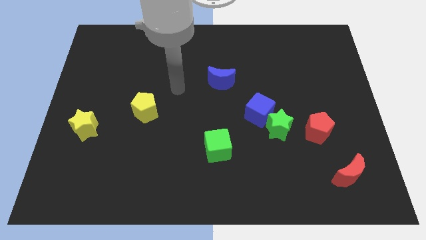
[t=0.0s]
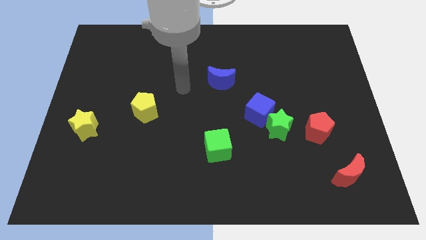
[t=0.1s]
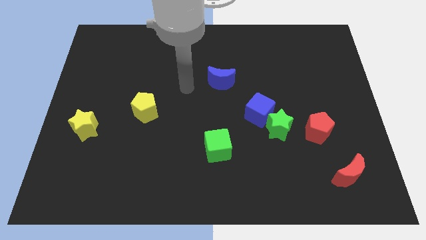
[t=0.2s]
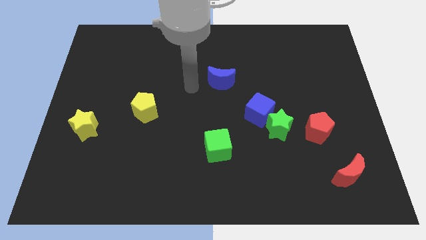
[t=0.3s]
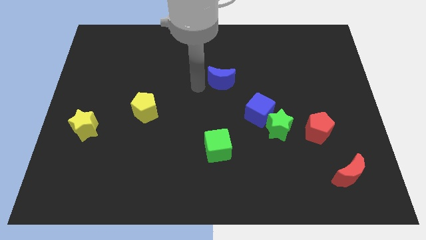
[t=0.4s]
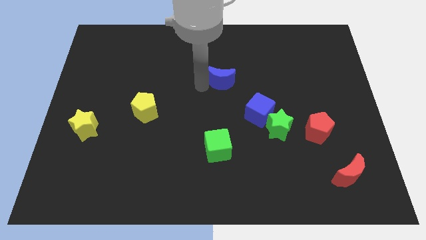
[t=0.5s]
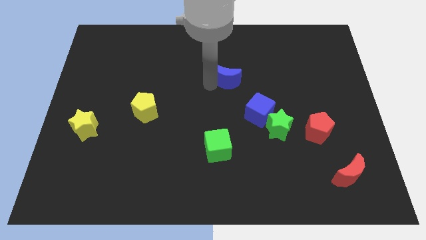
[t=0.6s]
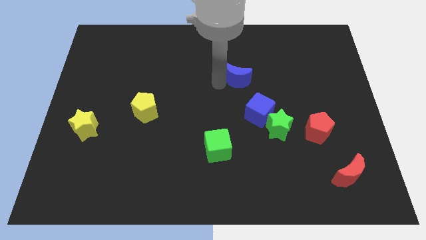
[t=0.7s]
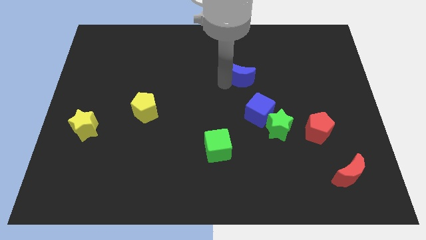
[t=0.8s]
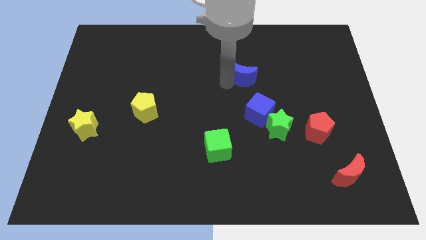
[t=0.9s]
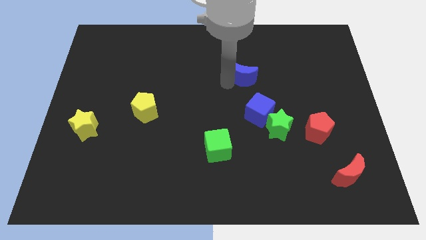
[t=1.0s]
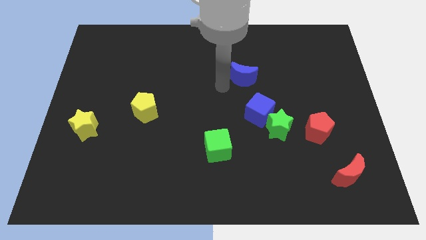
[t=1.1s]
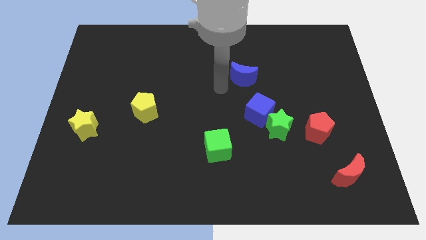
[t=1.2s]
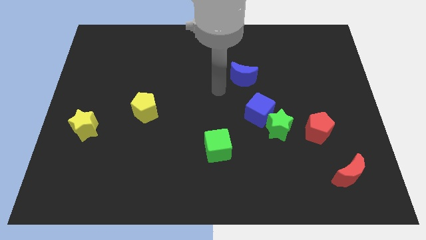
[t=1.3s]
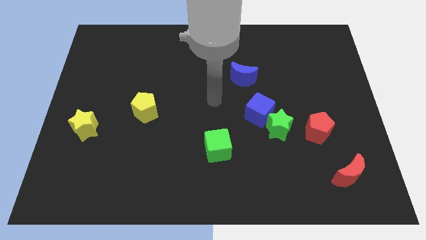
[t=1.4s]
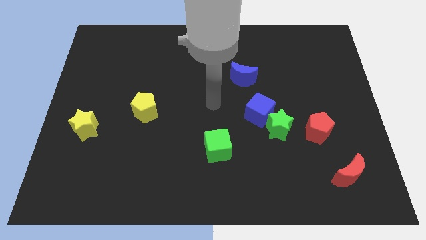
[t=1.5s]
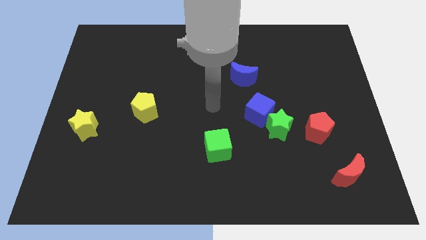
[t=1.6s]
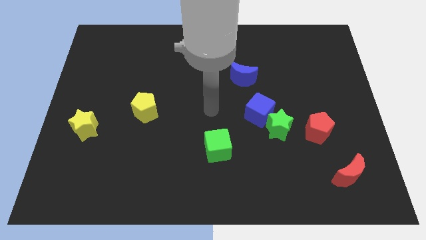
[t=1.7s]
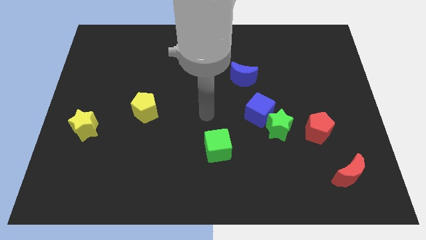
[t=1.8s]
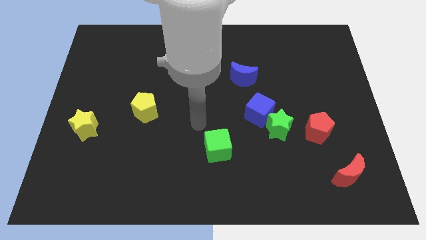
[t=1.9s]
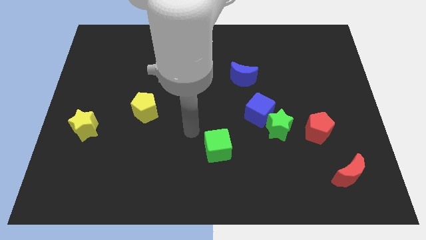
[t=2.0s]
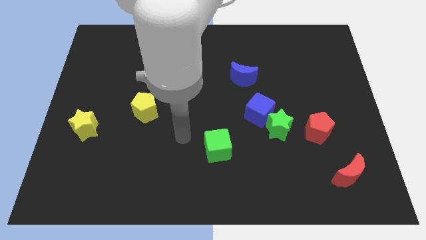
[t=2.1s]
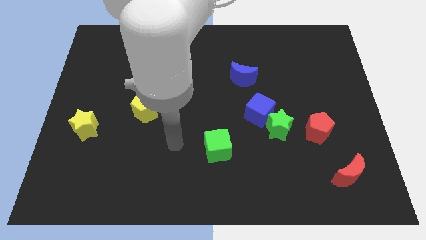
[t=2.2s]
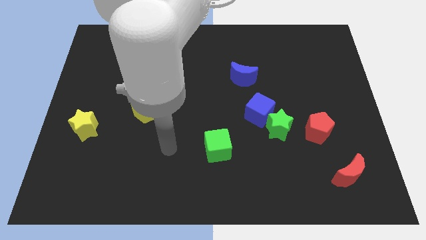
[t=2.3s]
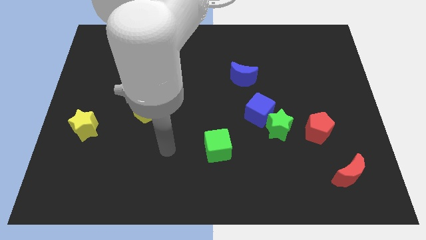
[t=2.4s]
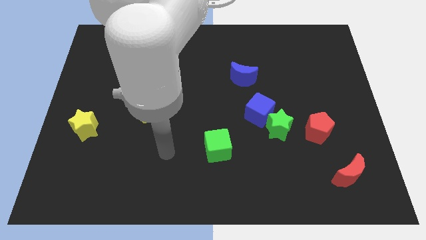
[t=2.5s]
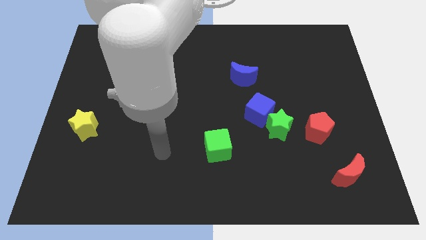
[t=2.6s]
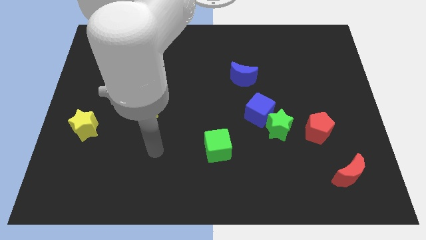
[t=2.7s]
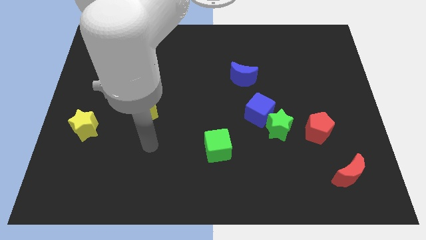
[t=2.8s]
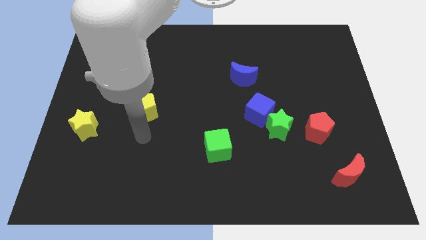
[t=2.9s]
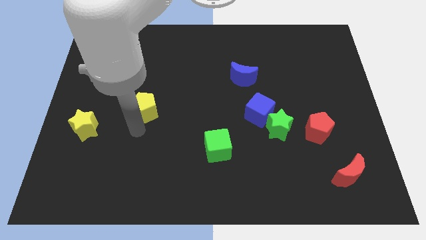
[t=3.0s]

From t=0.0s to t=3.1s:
place the arm down to the yellow pentagon

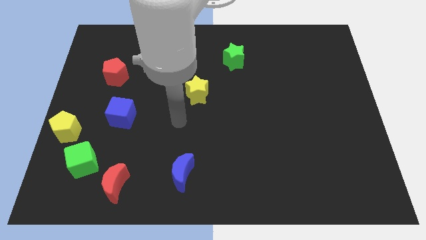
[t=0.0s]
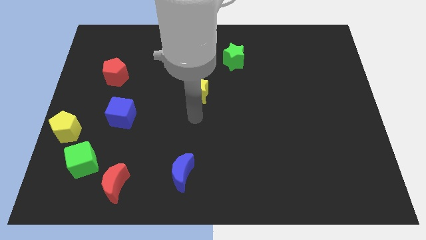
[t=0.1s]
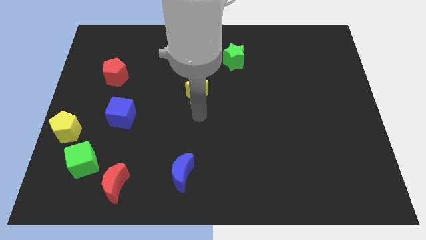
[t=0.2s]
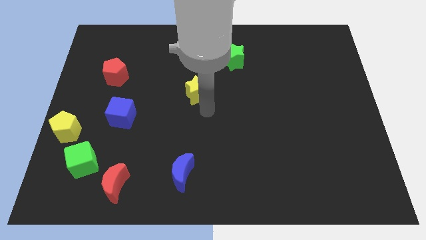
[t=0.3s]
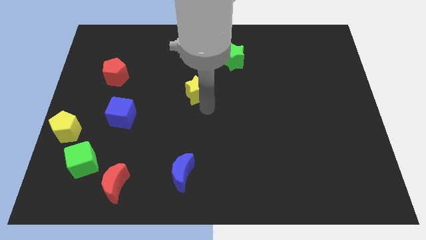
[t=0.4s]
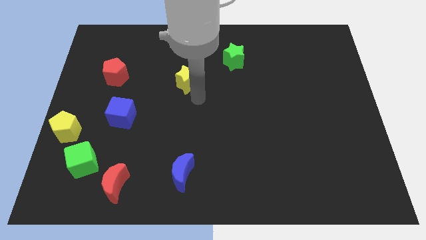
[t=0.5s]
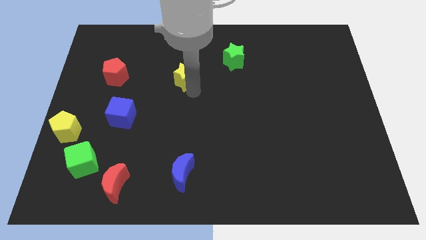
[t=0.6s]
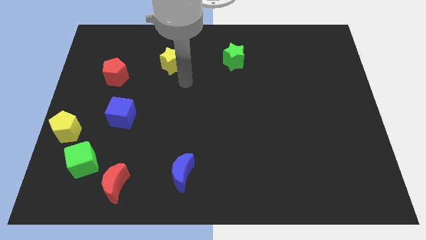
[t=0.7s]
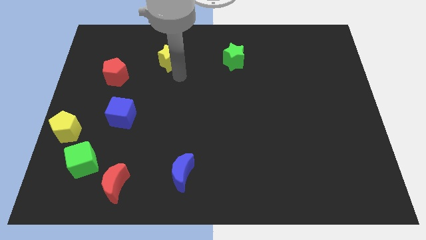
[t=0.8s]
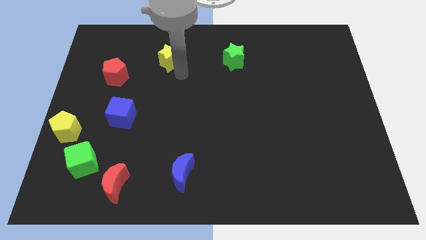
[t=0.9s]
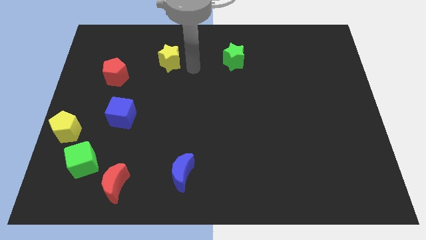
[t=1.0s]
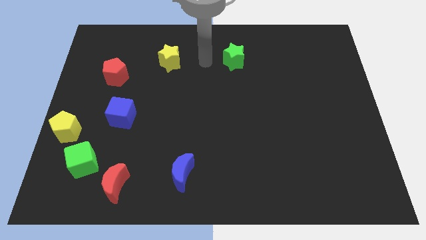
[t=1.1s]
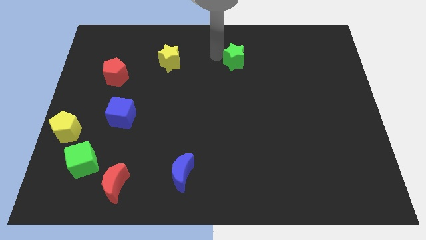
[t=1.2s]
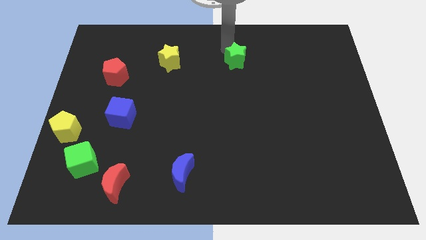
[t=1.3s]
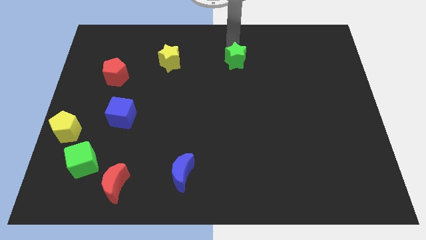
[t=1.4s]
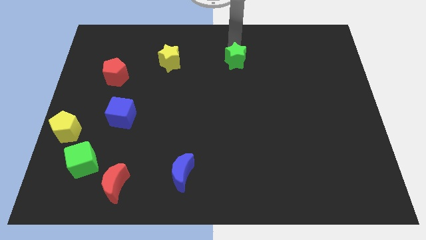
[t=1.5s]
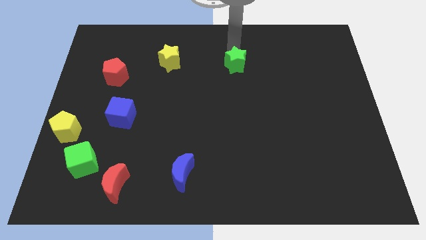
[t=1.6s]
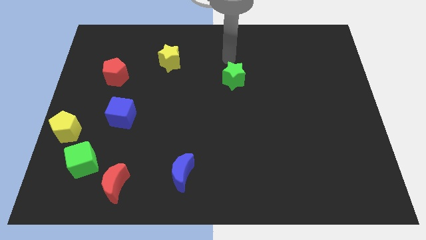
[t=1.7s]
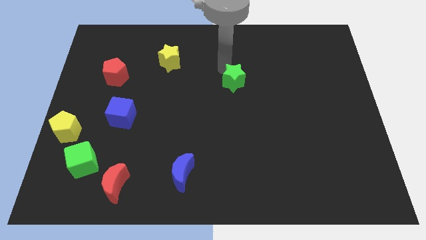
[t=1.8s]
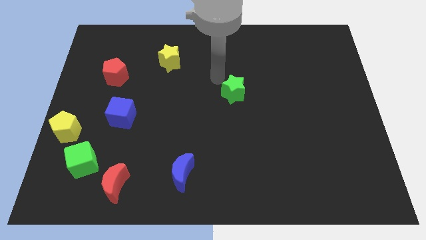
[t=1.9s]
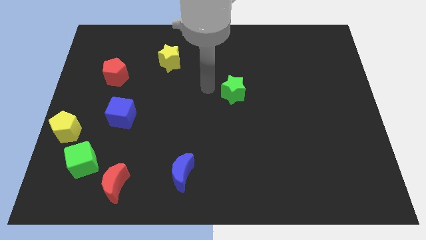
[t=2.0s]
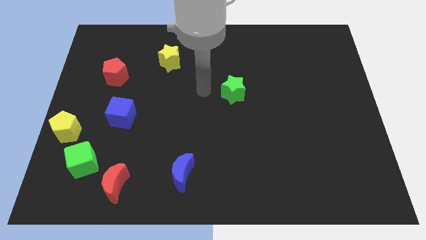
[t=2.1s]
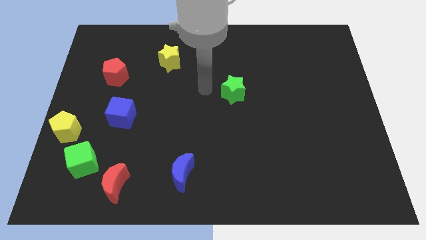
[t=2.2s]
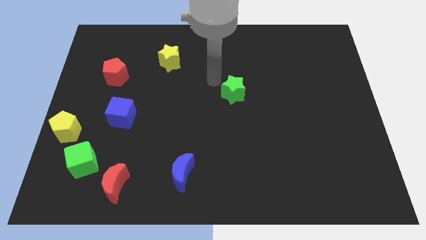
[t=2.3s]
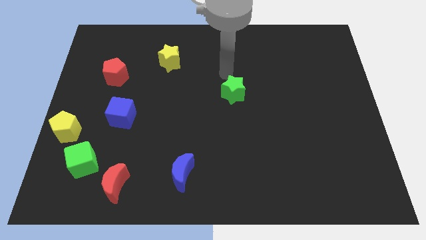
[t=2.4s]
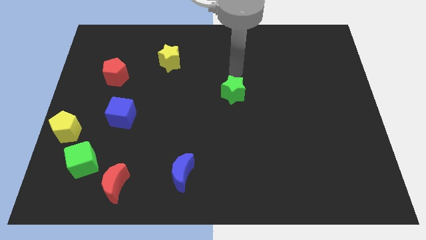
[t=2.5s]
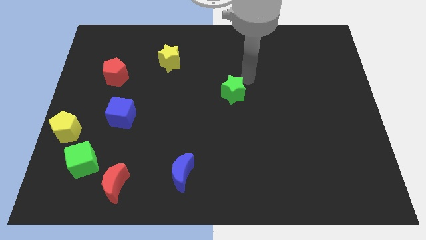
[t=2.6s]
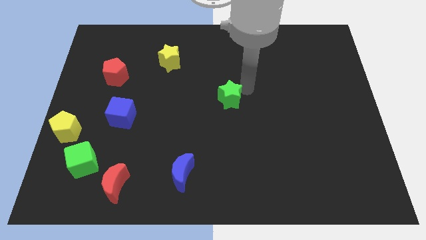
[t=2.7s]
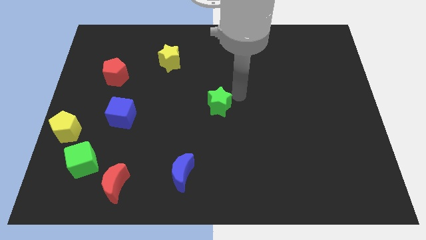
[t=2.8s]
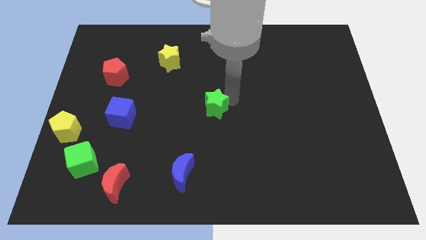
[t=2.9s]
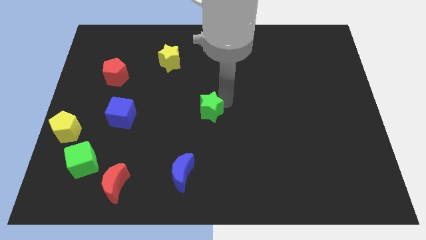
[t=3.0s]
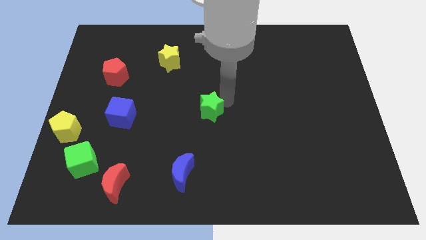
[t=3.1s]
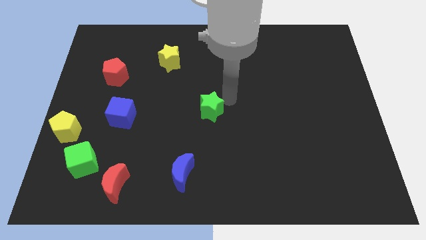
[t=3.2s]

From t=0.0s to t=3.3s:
move the green star to the right of the blue cube

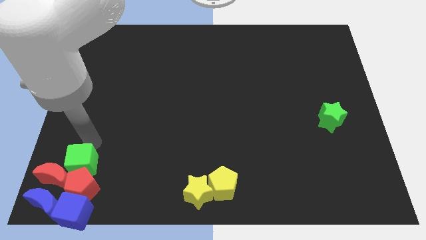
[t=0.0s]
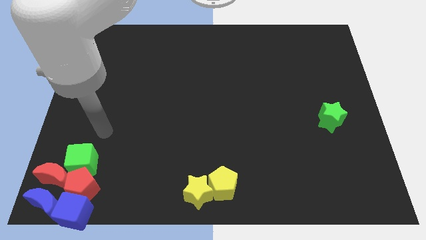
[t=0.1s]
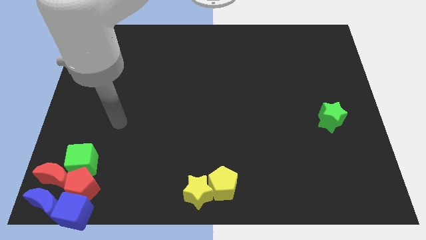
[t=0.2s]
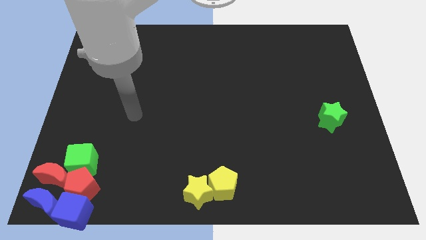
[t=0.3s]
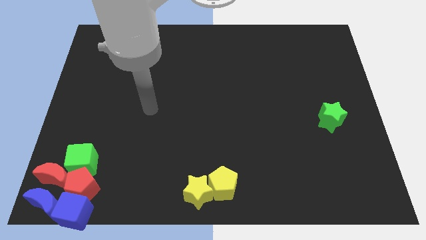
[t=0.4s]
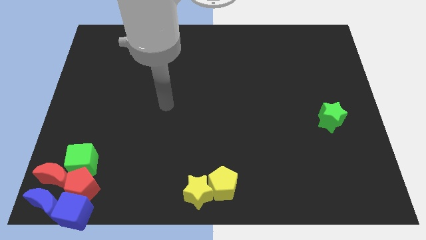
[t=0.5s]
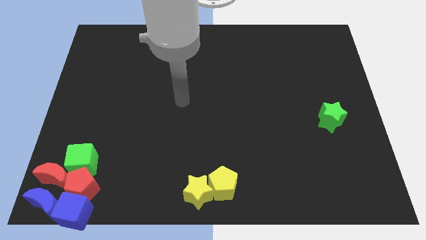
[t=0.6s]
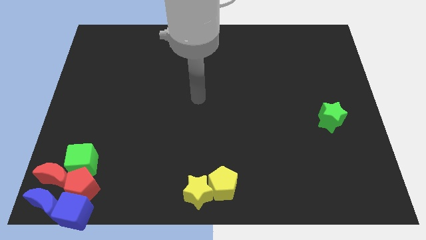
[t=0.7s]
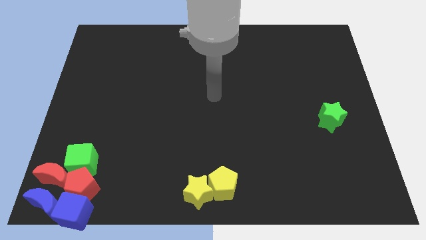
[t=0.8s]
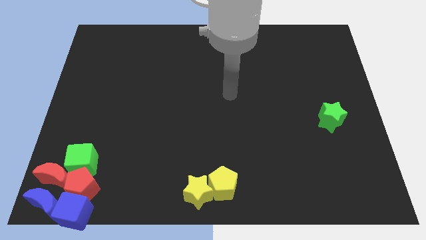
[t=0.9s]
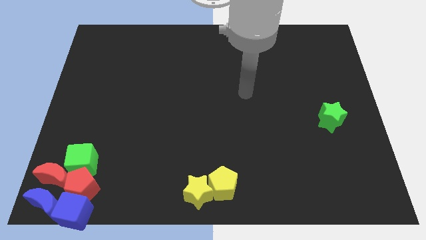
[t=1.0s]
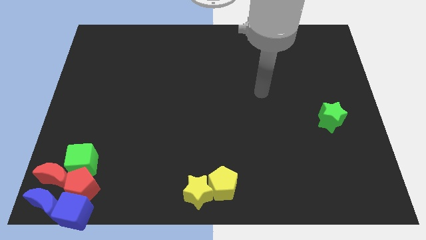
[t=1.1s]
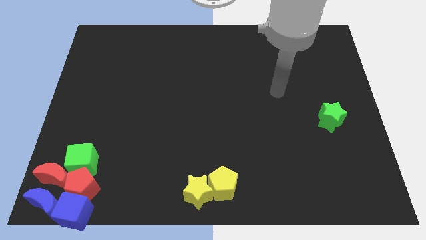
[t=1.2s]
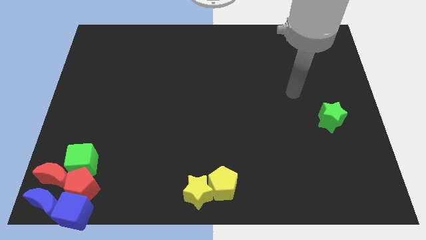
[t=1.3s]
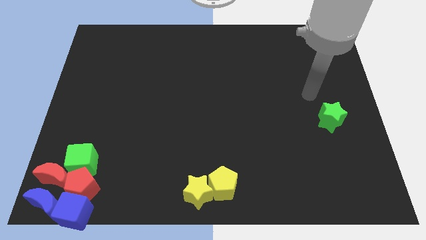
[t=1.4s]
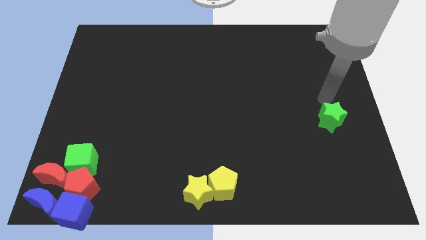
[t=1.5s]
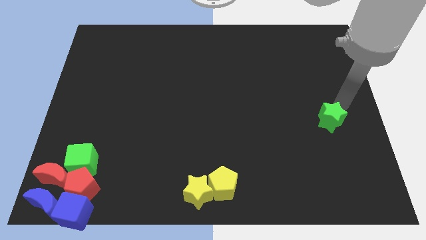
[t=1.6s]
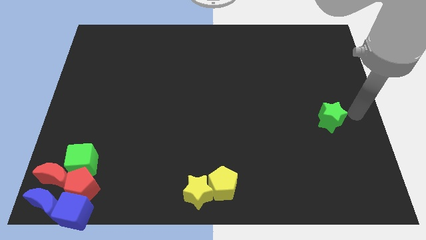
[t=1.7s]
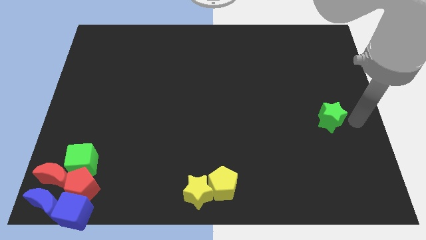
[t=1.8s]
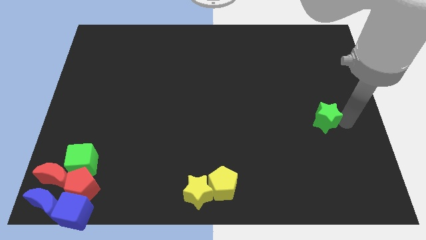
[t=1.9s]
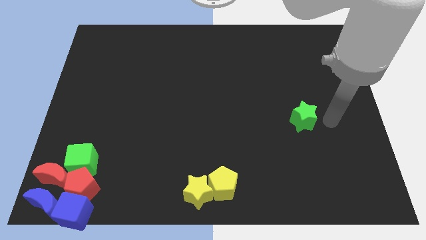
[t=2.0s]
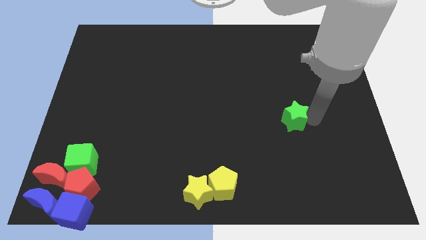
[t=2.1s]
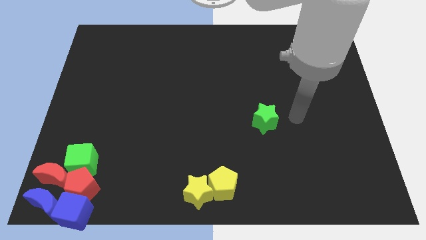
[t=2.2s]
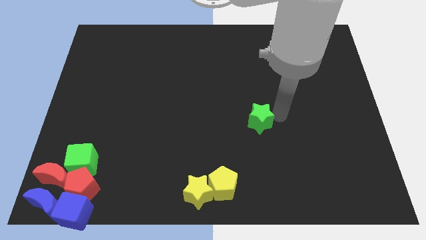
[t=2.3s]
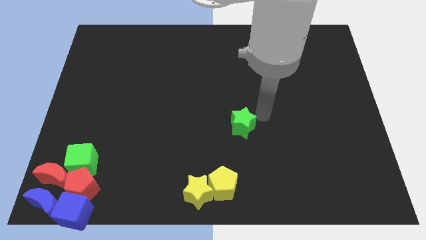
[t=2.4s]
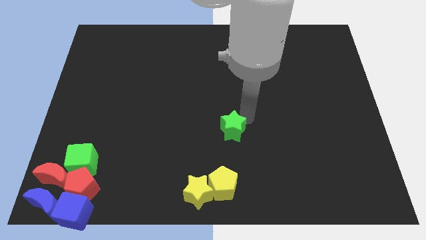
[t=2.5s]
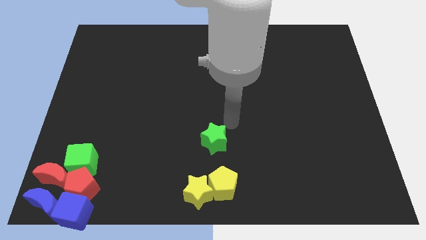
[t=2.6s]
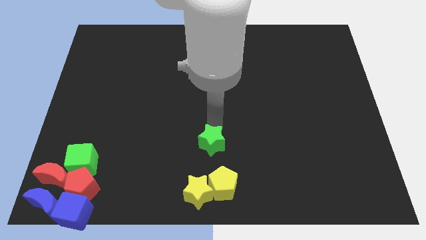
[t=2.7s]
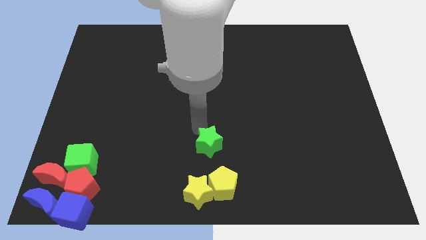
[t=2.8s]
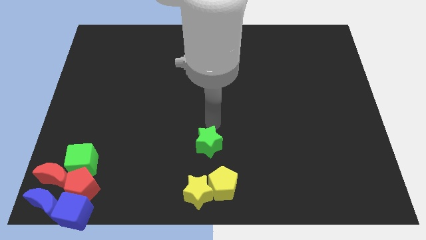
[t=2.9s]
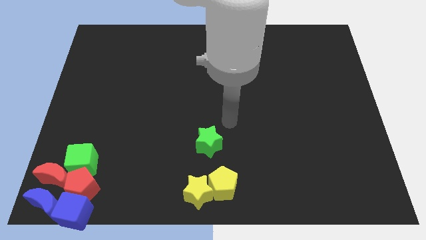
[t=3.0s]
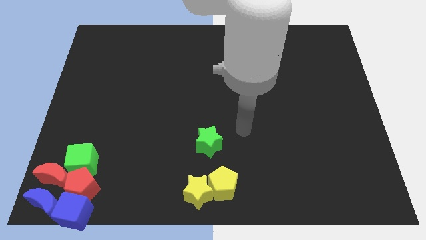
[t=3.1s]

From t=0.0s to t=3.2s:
place green star above yellow pentagon
